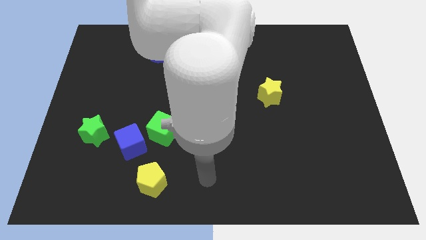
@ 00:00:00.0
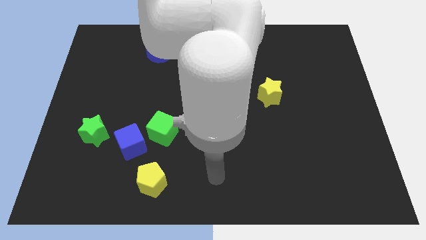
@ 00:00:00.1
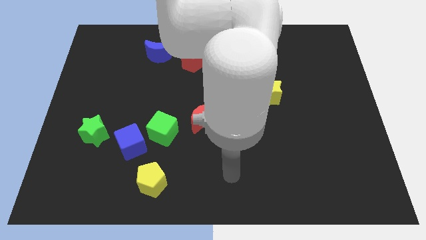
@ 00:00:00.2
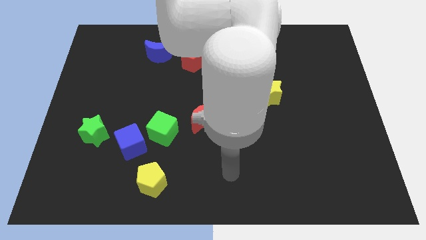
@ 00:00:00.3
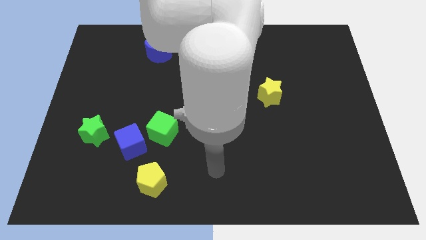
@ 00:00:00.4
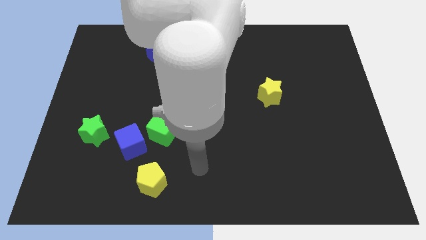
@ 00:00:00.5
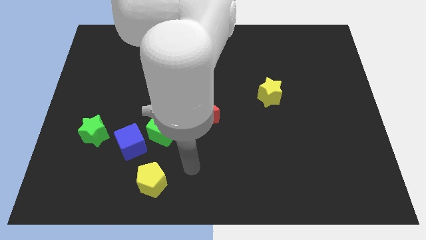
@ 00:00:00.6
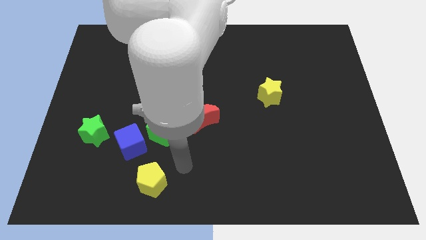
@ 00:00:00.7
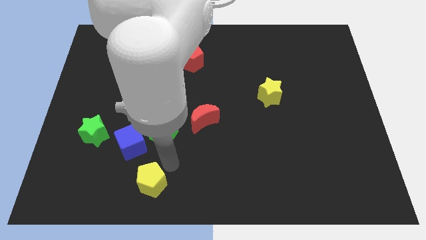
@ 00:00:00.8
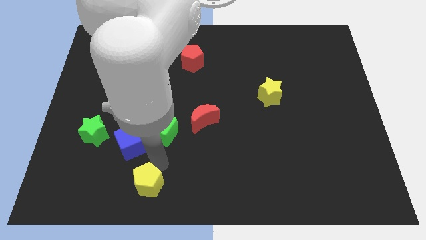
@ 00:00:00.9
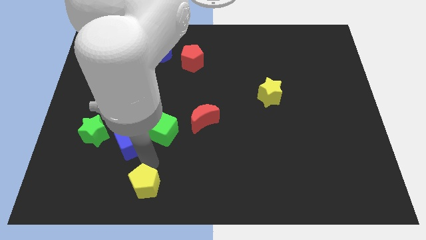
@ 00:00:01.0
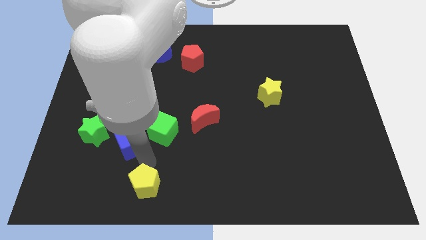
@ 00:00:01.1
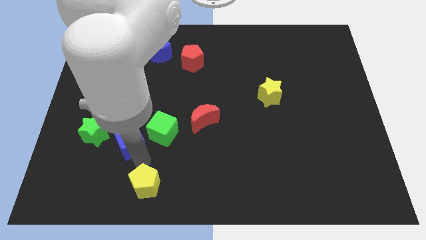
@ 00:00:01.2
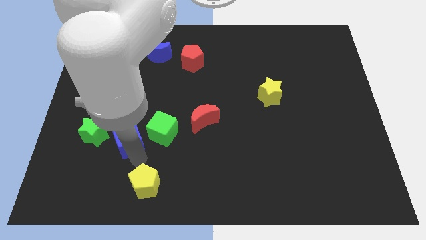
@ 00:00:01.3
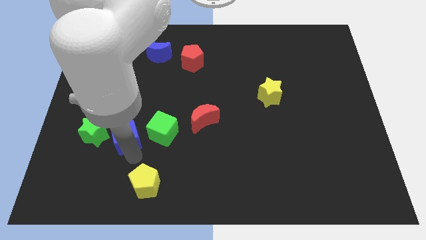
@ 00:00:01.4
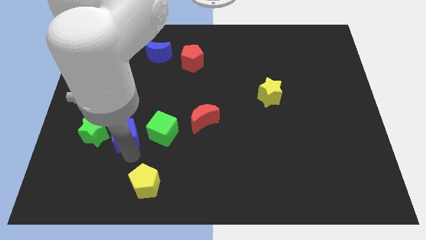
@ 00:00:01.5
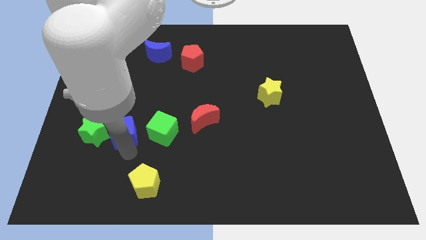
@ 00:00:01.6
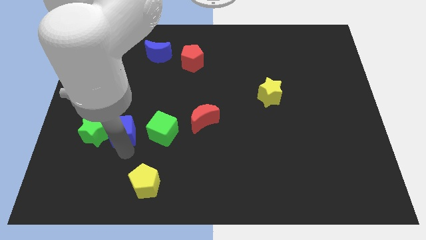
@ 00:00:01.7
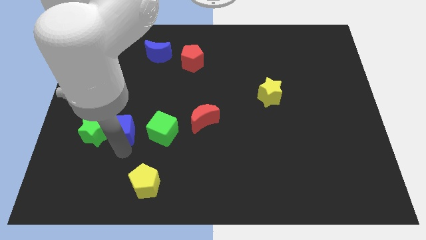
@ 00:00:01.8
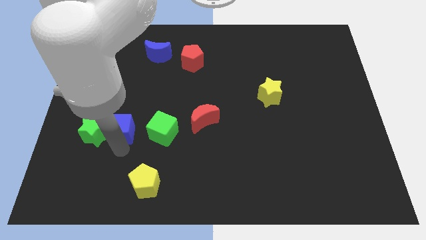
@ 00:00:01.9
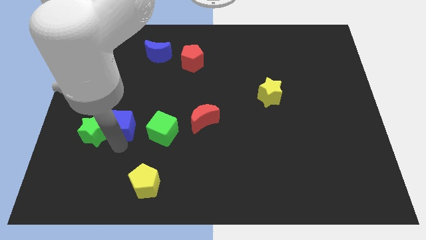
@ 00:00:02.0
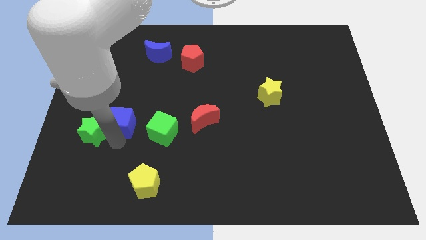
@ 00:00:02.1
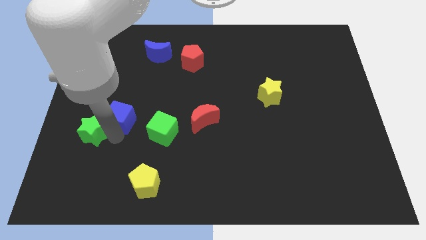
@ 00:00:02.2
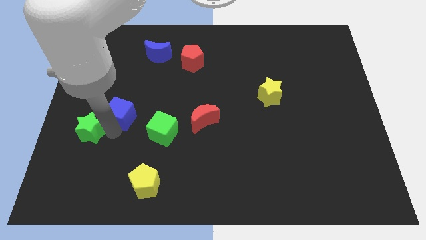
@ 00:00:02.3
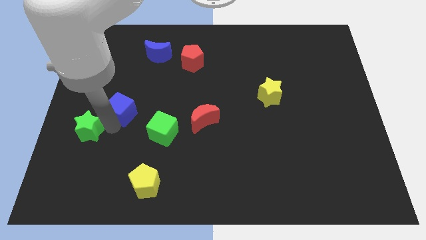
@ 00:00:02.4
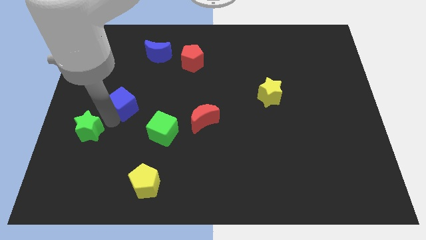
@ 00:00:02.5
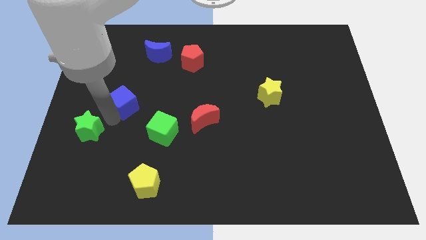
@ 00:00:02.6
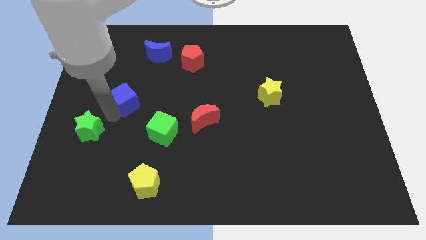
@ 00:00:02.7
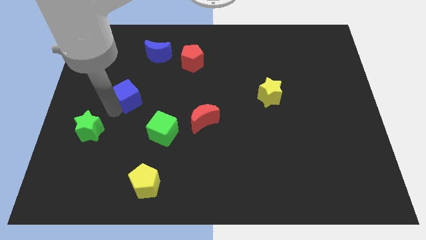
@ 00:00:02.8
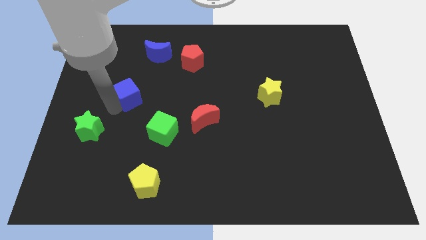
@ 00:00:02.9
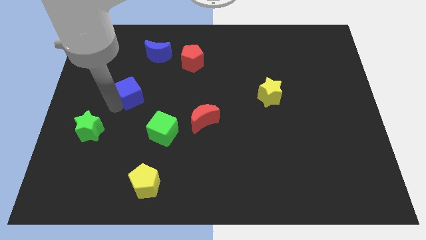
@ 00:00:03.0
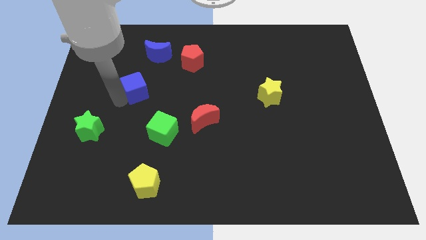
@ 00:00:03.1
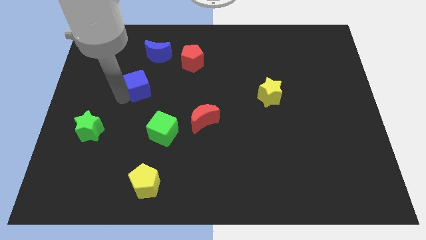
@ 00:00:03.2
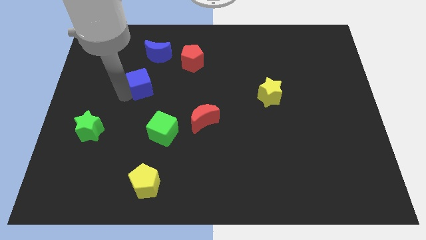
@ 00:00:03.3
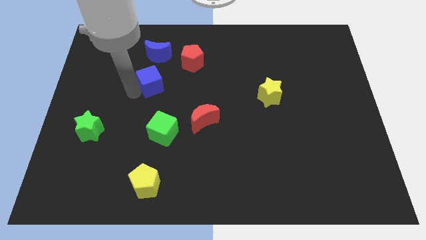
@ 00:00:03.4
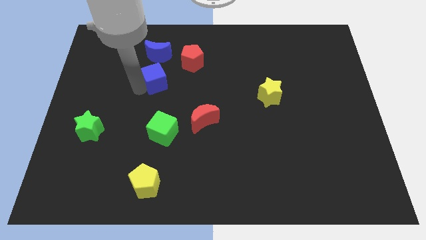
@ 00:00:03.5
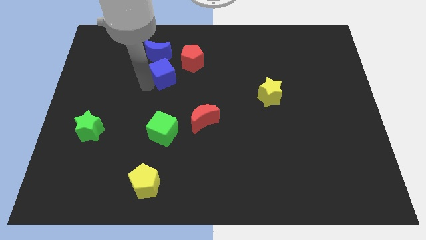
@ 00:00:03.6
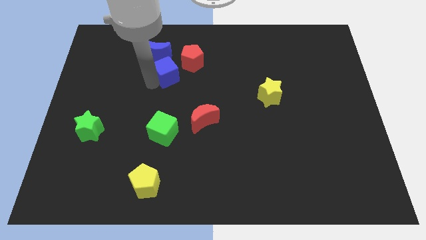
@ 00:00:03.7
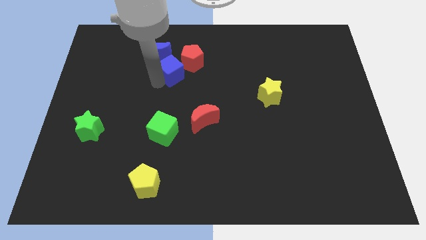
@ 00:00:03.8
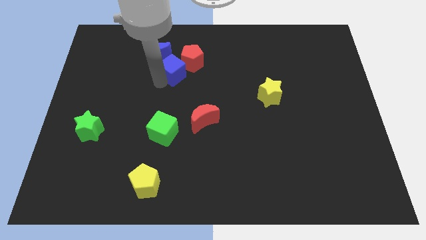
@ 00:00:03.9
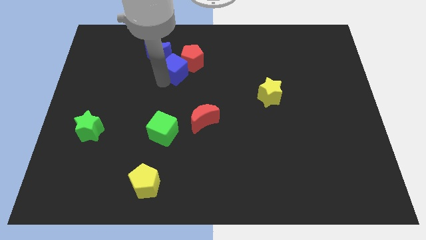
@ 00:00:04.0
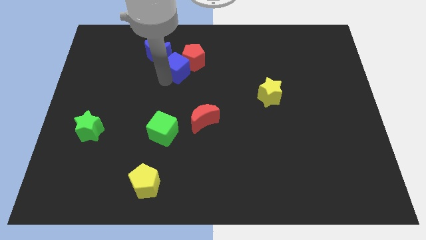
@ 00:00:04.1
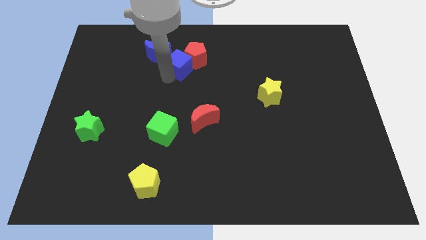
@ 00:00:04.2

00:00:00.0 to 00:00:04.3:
move the blue cube next to the red pentagon

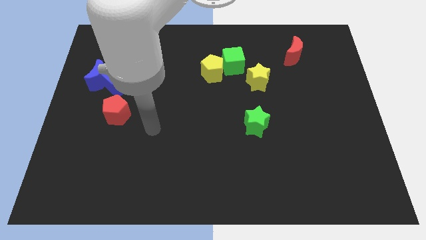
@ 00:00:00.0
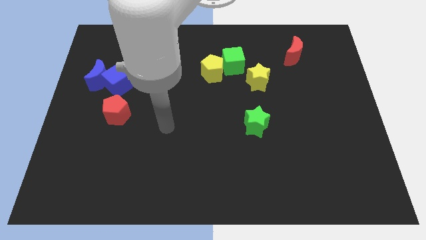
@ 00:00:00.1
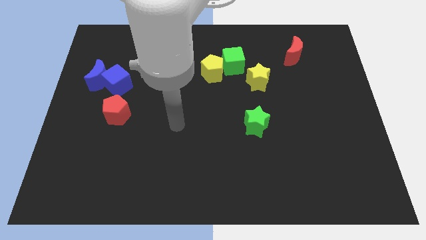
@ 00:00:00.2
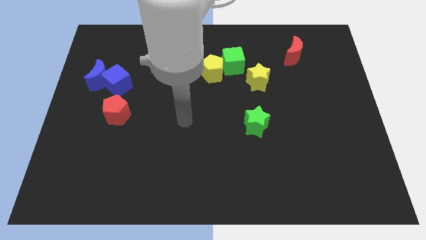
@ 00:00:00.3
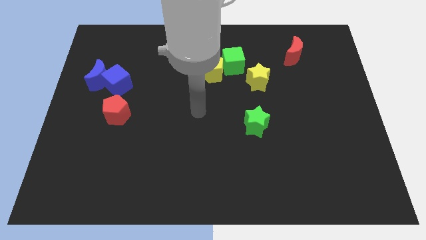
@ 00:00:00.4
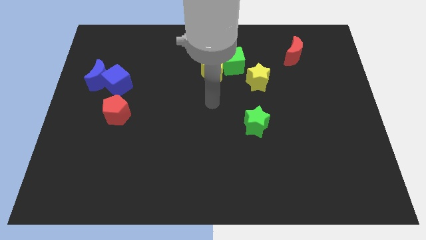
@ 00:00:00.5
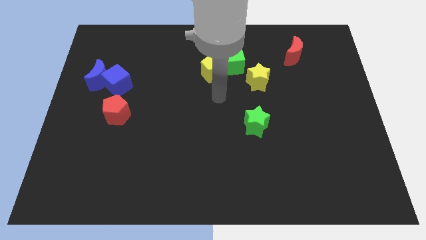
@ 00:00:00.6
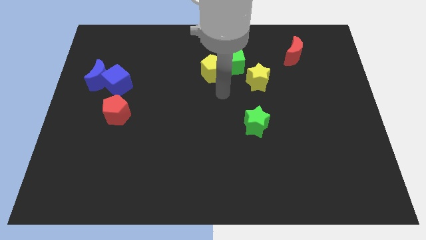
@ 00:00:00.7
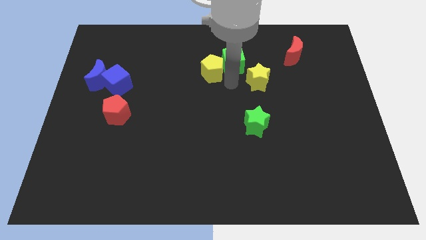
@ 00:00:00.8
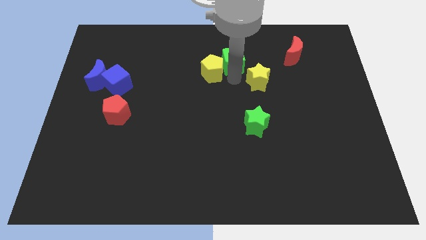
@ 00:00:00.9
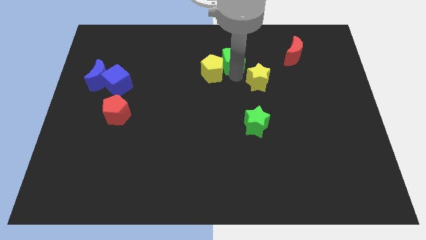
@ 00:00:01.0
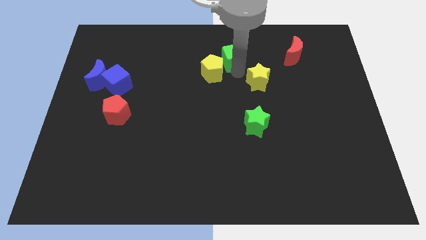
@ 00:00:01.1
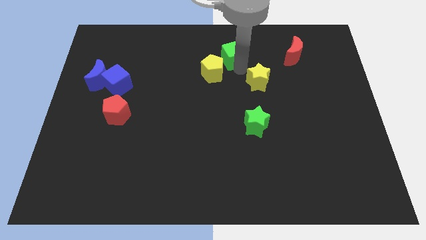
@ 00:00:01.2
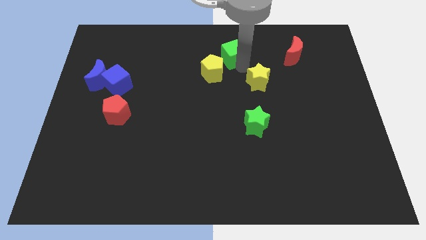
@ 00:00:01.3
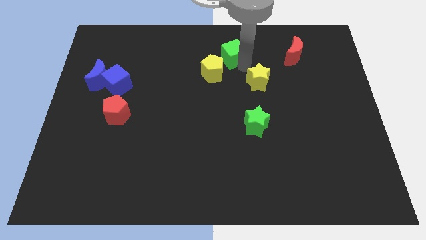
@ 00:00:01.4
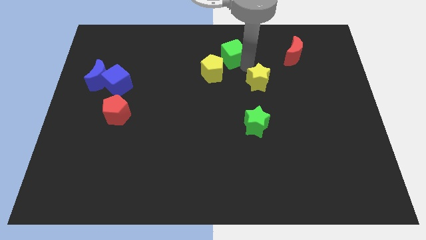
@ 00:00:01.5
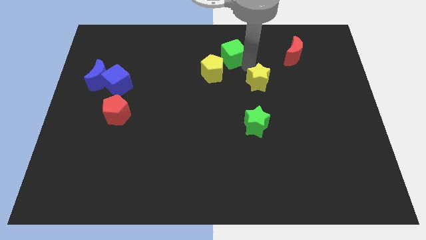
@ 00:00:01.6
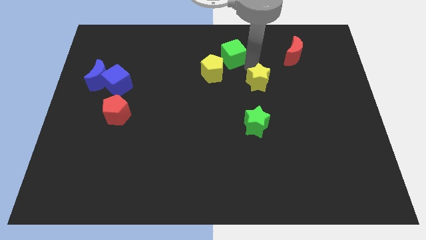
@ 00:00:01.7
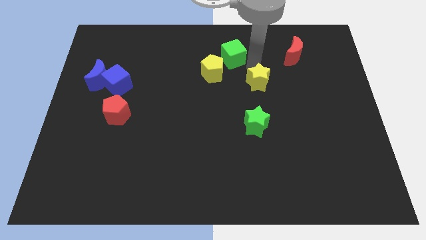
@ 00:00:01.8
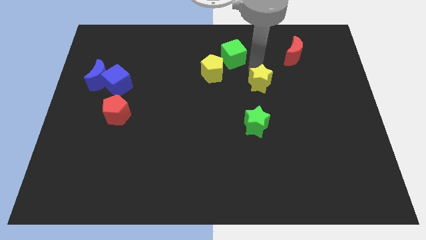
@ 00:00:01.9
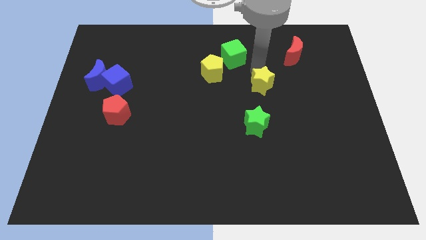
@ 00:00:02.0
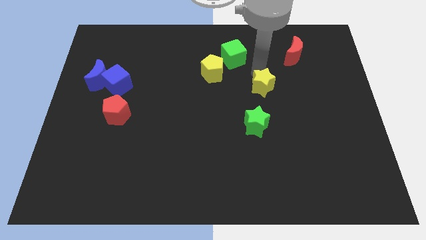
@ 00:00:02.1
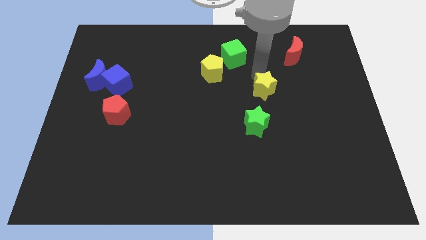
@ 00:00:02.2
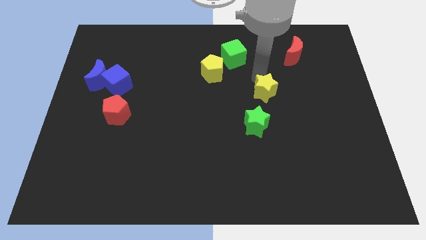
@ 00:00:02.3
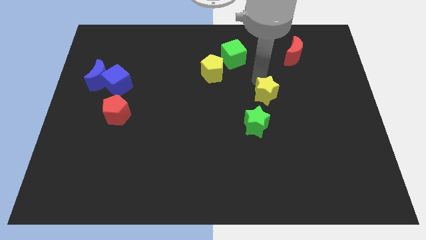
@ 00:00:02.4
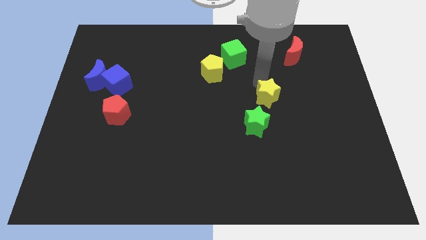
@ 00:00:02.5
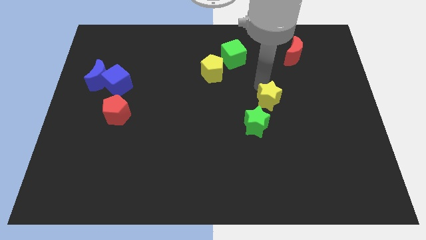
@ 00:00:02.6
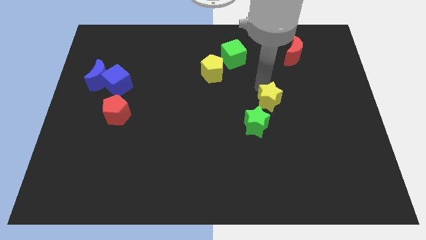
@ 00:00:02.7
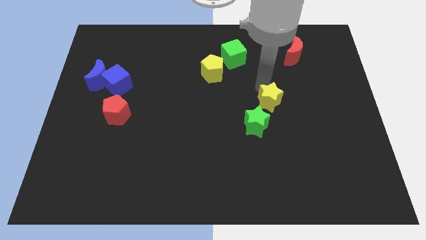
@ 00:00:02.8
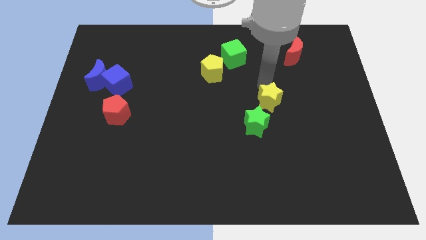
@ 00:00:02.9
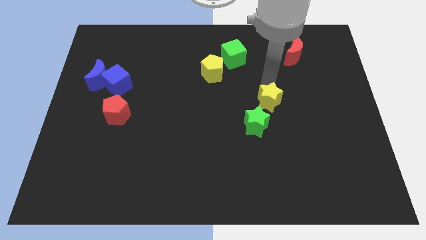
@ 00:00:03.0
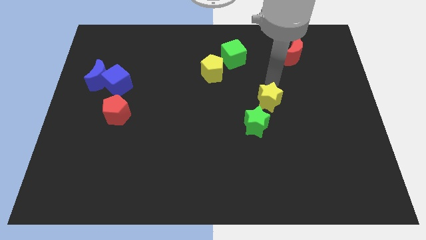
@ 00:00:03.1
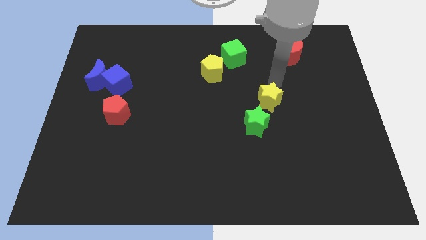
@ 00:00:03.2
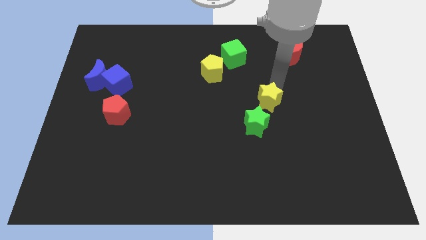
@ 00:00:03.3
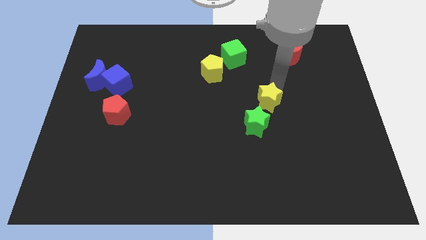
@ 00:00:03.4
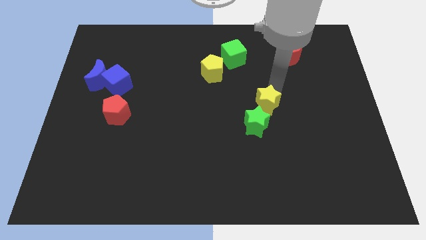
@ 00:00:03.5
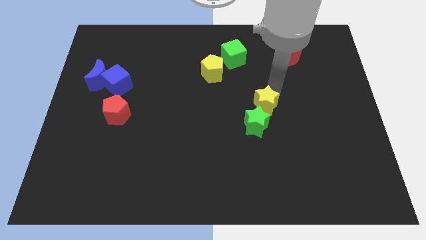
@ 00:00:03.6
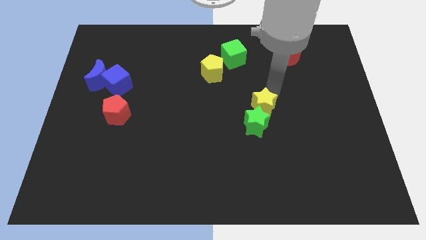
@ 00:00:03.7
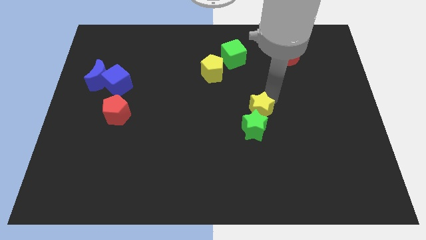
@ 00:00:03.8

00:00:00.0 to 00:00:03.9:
slide the yellow star towards the green star
